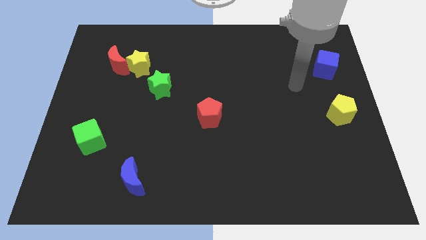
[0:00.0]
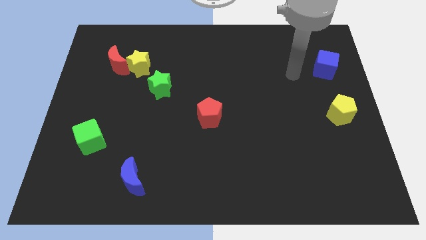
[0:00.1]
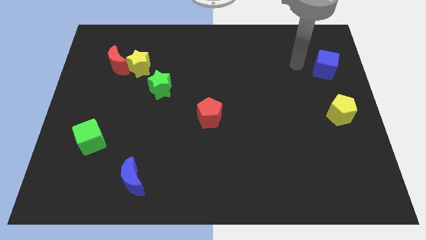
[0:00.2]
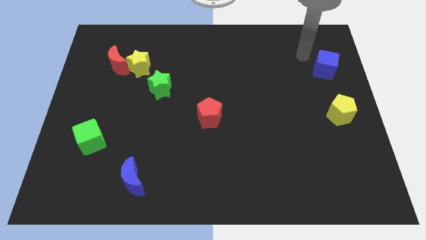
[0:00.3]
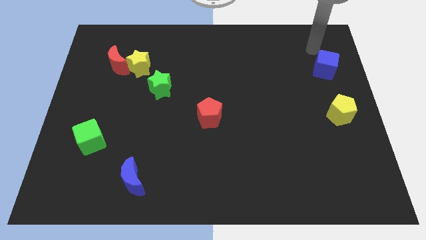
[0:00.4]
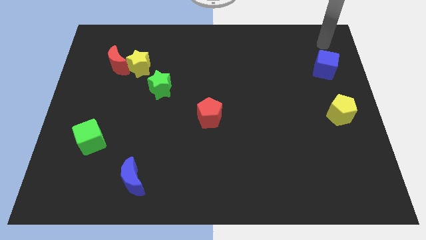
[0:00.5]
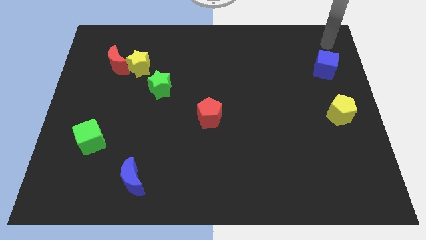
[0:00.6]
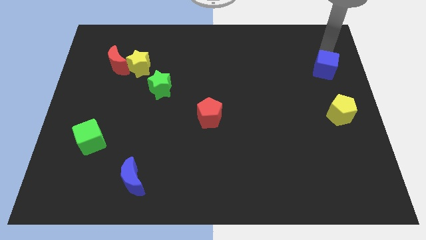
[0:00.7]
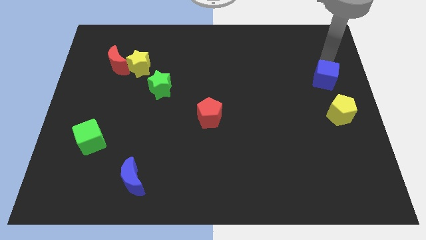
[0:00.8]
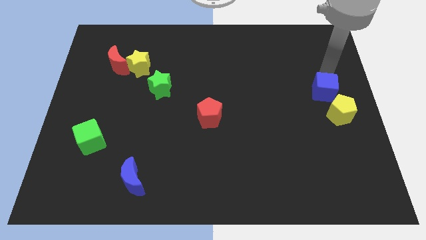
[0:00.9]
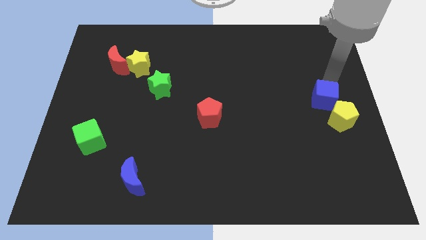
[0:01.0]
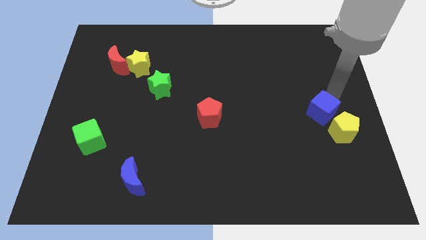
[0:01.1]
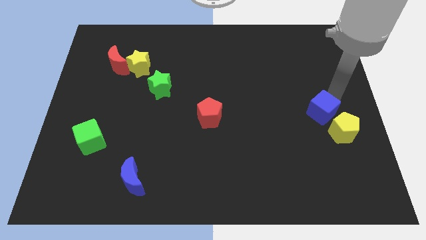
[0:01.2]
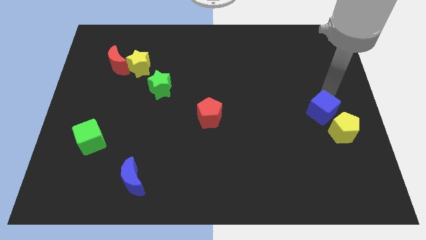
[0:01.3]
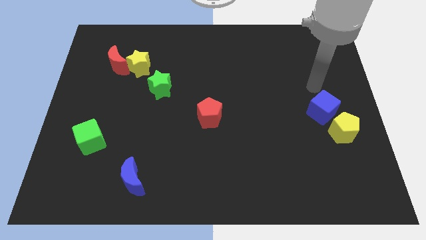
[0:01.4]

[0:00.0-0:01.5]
push the blue cube into the yellow pentagon

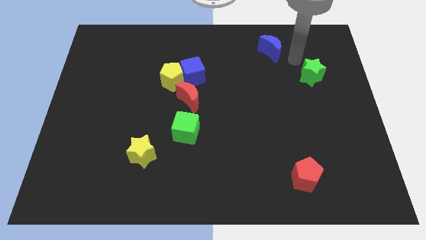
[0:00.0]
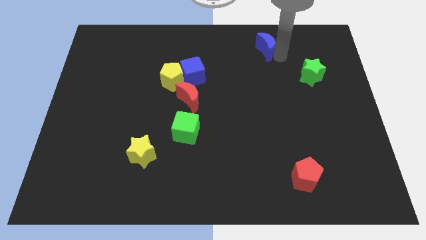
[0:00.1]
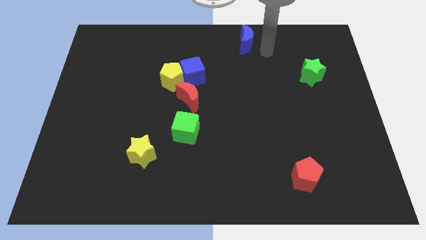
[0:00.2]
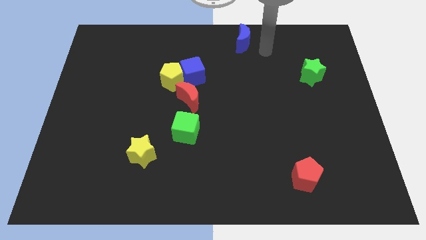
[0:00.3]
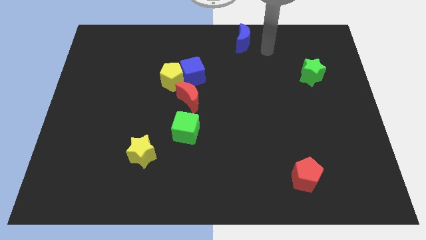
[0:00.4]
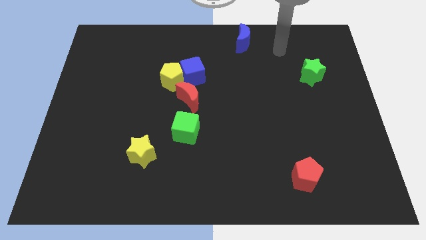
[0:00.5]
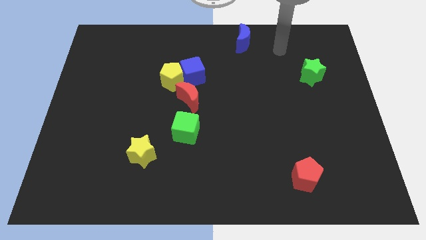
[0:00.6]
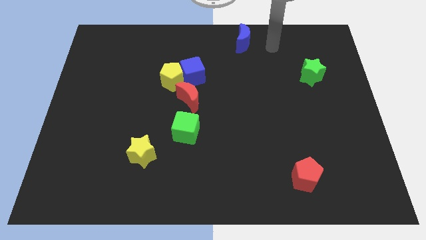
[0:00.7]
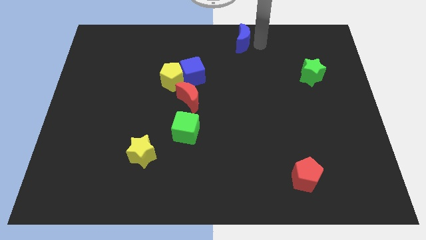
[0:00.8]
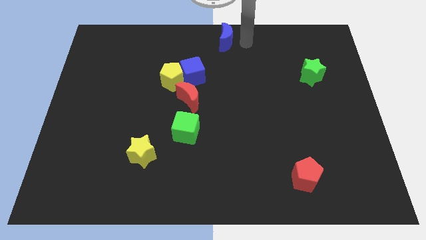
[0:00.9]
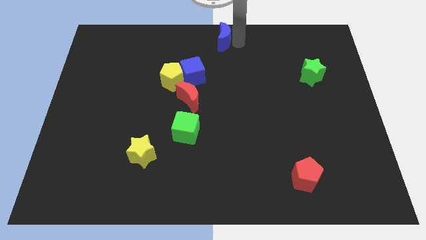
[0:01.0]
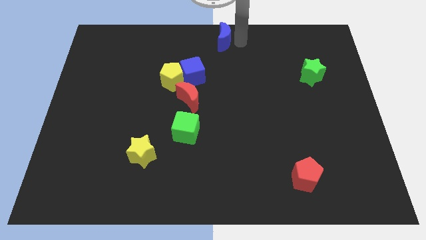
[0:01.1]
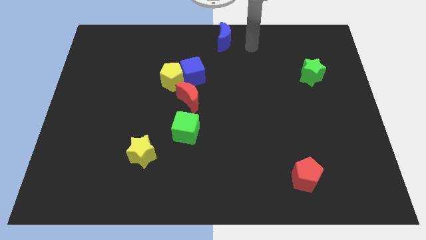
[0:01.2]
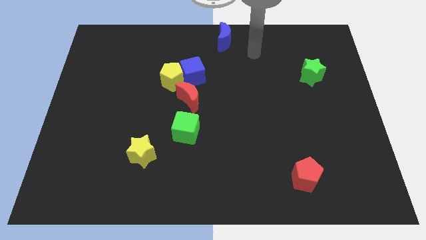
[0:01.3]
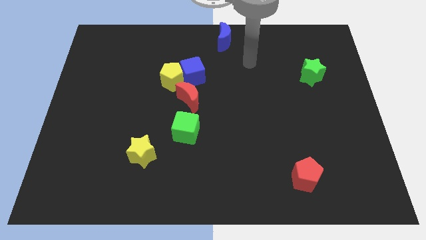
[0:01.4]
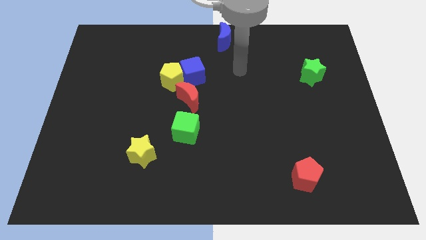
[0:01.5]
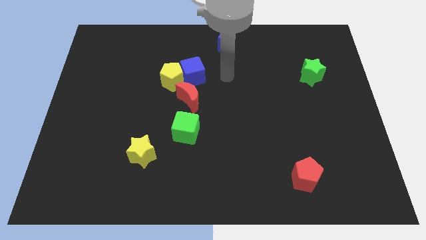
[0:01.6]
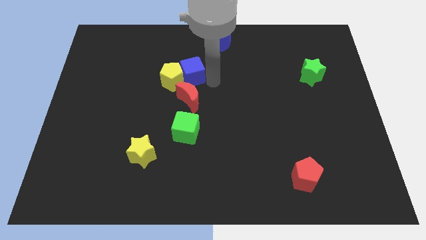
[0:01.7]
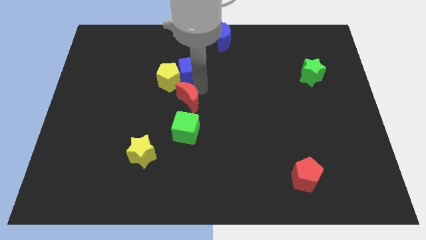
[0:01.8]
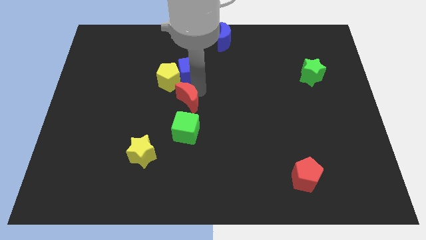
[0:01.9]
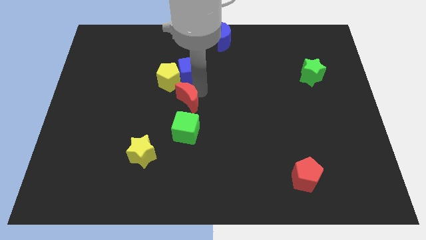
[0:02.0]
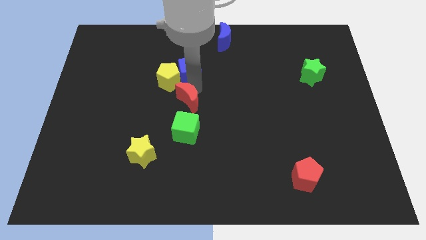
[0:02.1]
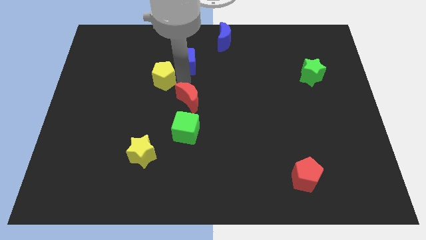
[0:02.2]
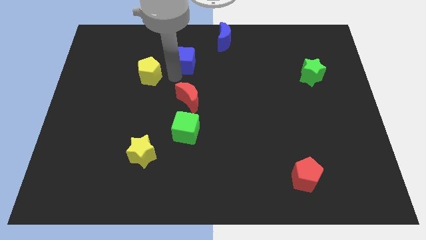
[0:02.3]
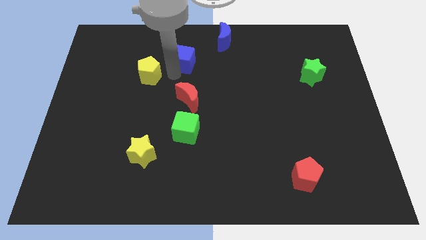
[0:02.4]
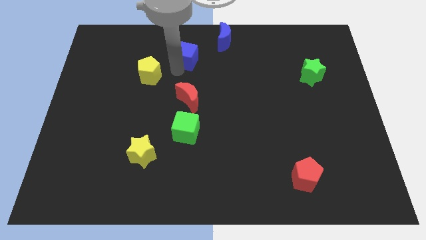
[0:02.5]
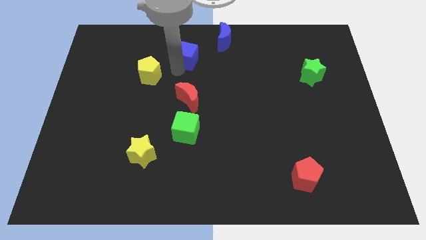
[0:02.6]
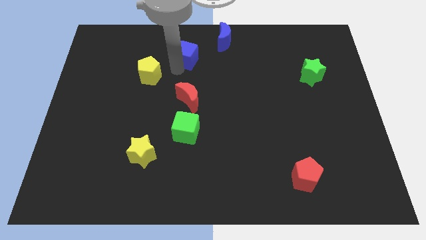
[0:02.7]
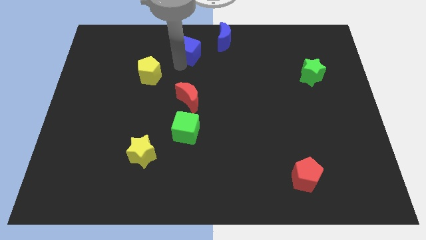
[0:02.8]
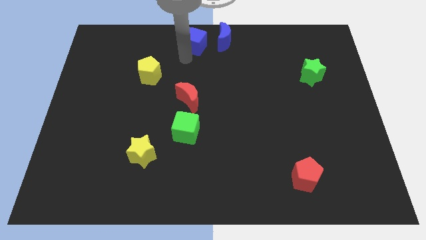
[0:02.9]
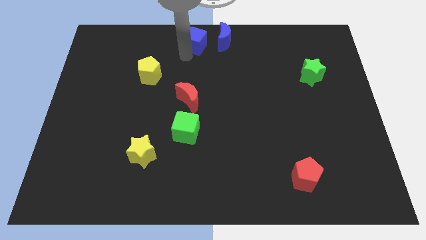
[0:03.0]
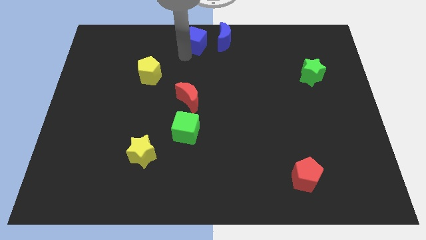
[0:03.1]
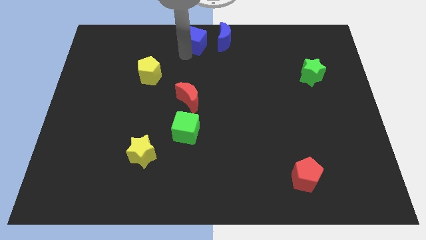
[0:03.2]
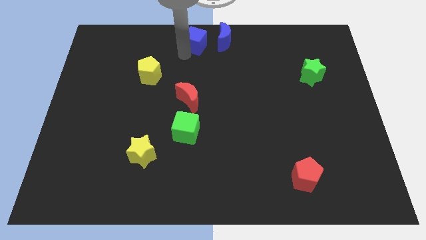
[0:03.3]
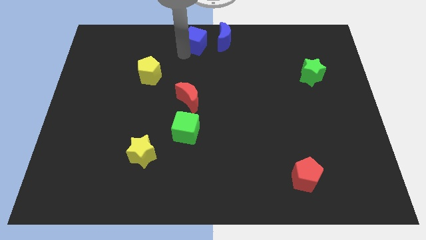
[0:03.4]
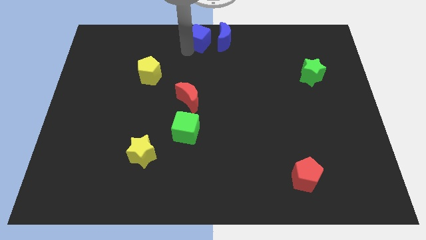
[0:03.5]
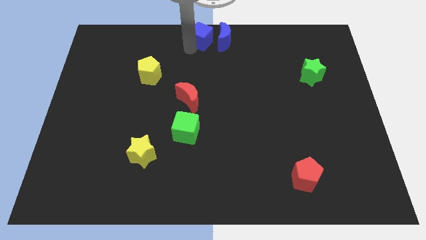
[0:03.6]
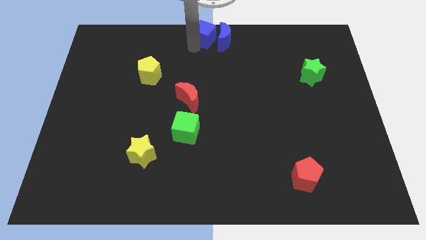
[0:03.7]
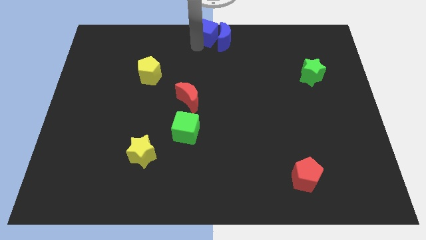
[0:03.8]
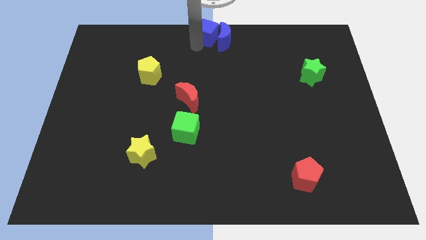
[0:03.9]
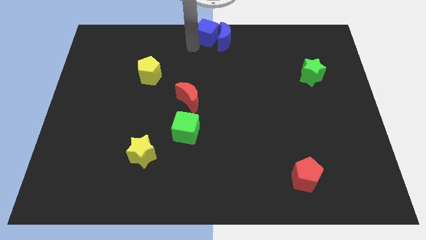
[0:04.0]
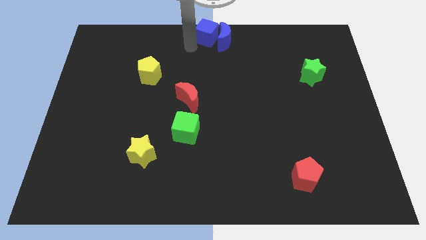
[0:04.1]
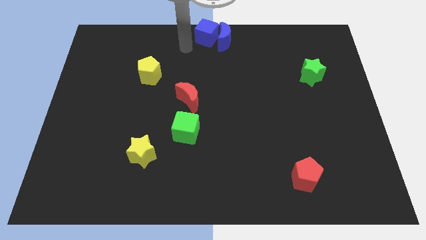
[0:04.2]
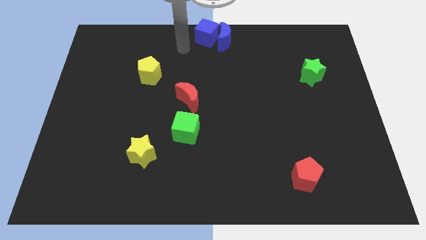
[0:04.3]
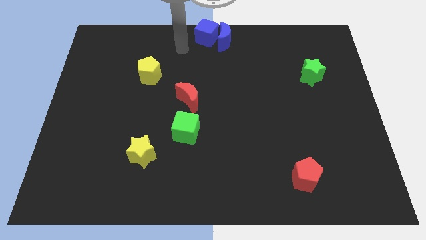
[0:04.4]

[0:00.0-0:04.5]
place the blue cube and blue crescent to the top center of the board

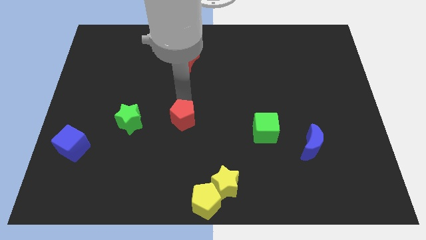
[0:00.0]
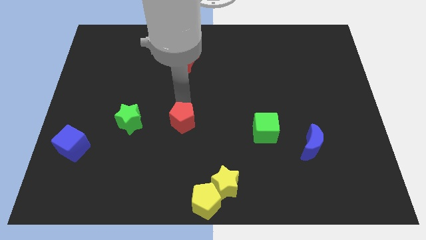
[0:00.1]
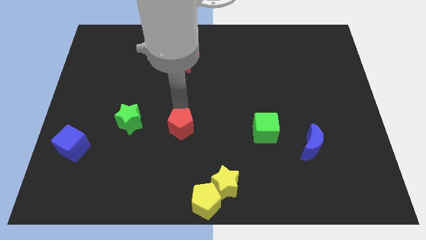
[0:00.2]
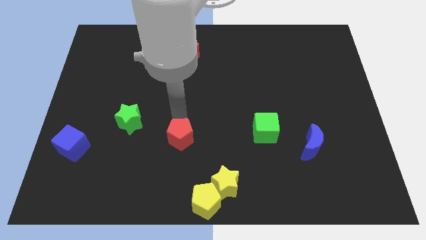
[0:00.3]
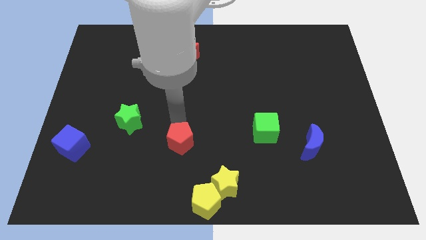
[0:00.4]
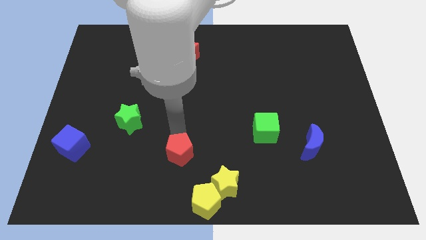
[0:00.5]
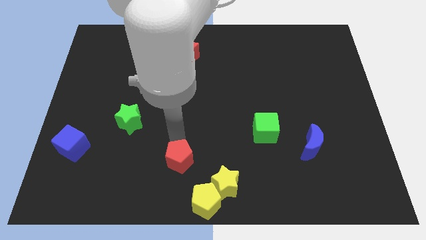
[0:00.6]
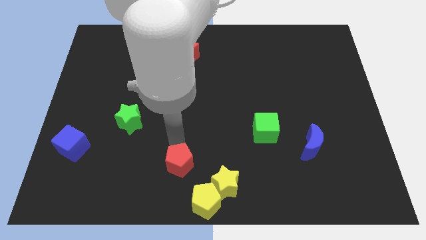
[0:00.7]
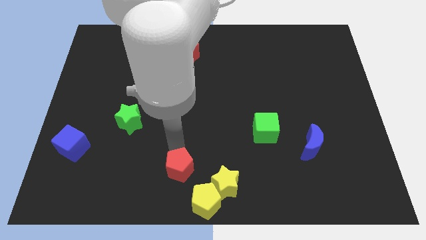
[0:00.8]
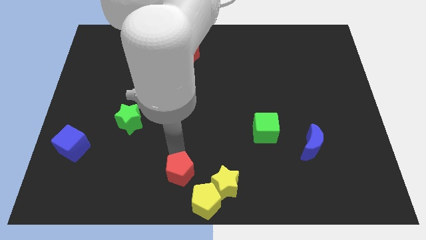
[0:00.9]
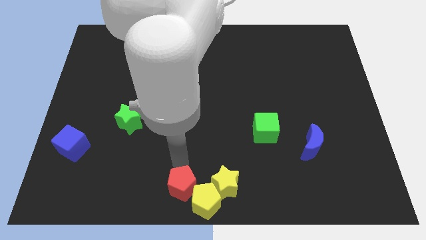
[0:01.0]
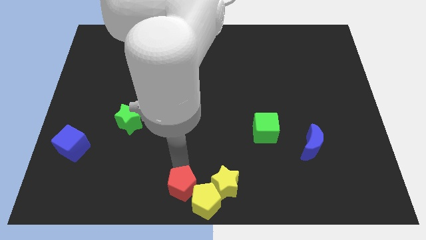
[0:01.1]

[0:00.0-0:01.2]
push red pentagon near yellow pentagon

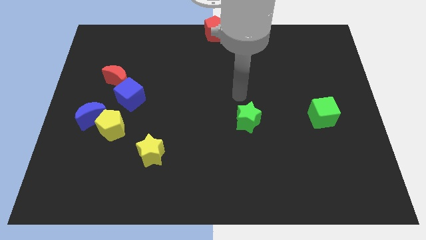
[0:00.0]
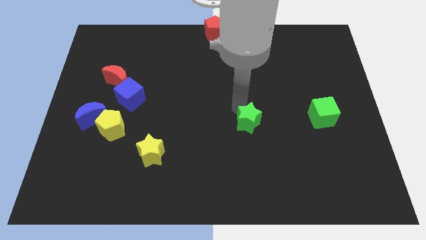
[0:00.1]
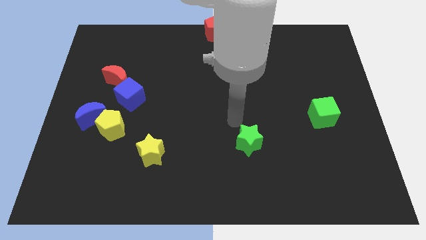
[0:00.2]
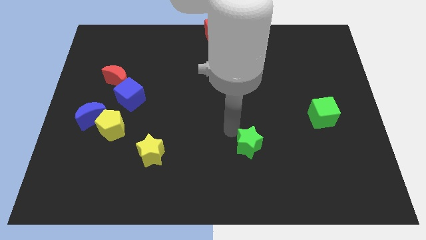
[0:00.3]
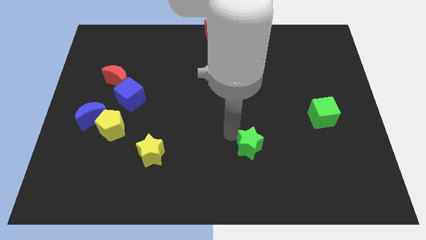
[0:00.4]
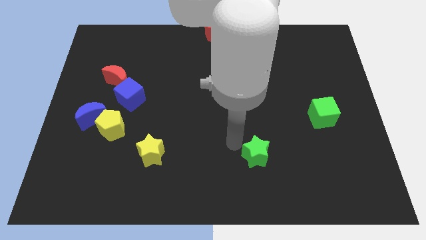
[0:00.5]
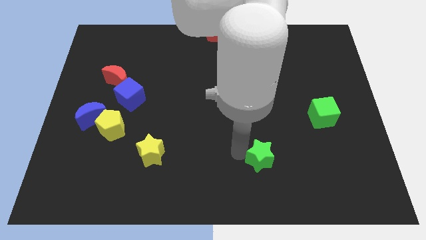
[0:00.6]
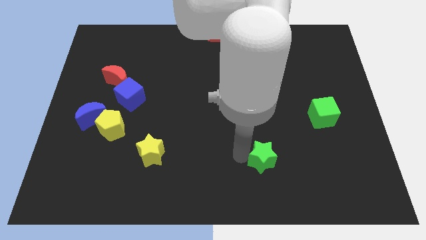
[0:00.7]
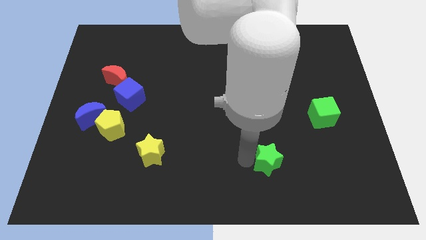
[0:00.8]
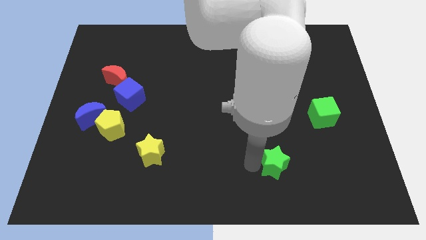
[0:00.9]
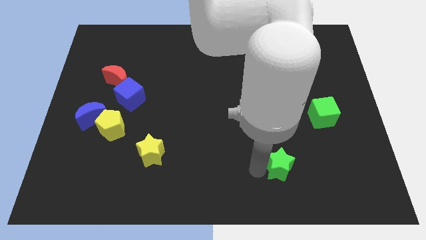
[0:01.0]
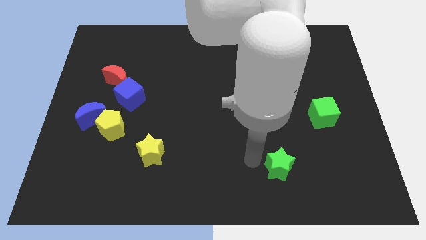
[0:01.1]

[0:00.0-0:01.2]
push the green star downwards

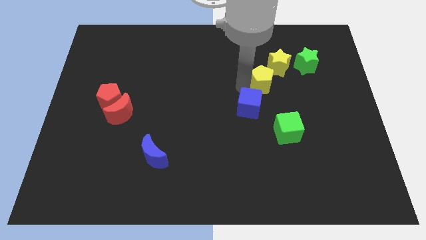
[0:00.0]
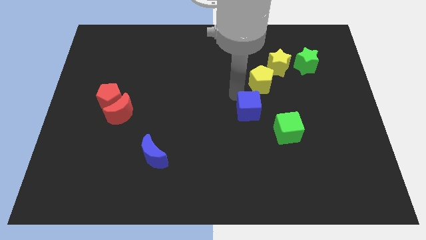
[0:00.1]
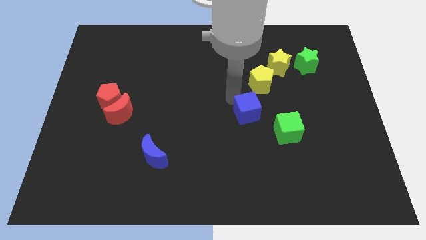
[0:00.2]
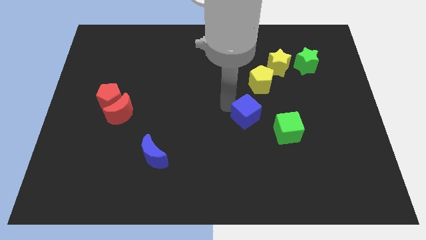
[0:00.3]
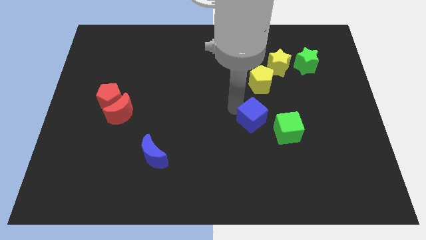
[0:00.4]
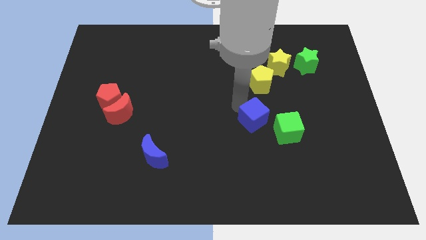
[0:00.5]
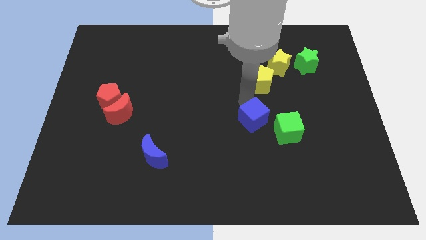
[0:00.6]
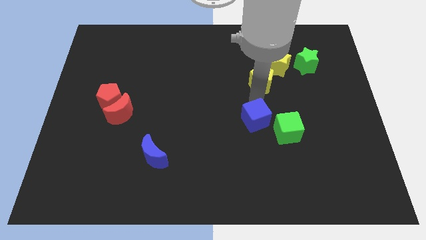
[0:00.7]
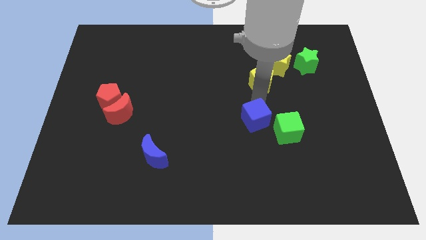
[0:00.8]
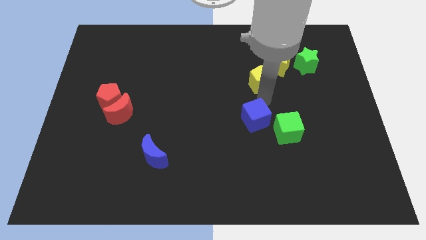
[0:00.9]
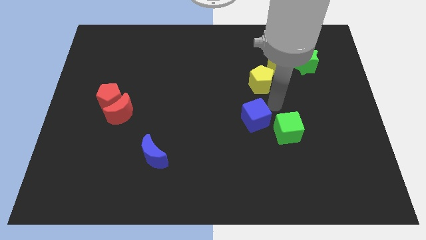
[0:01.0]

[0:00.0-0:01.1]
push the blue cube to the left of the green cube
